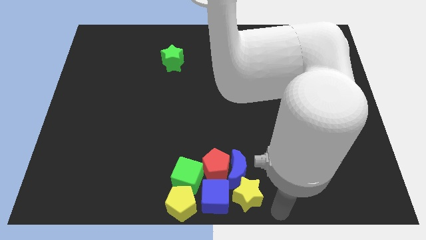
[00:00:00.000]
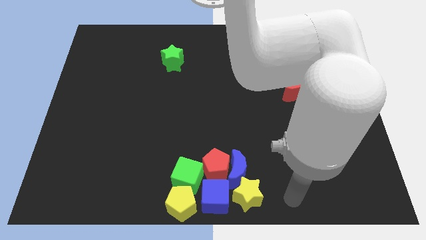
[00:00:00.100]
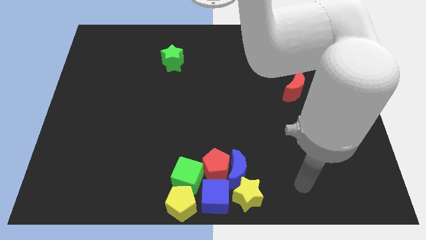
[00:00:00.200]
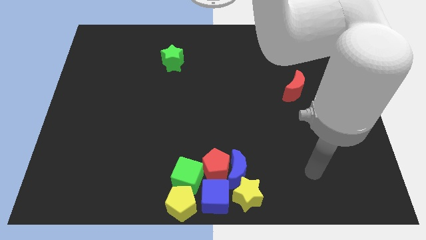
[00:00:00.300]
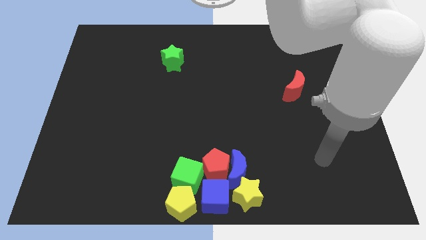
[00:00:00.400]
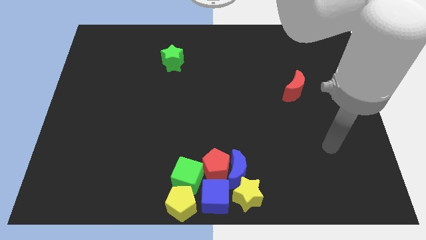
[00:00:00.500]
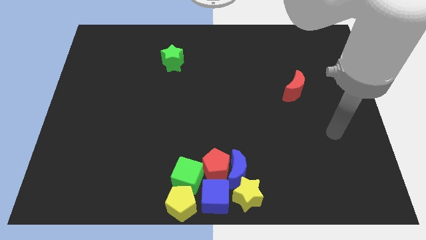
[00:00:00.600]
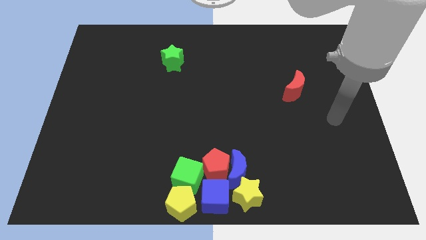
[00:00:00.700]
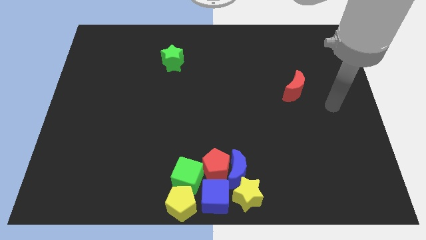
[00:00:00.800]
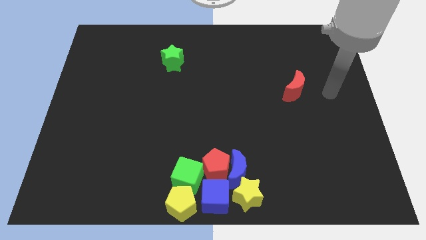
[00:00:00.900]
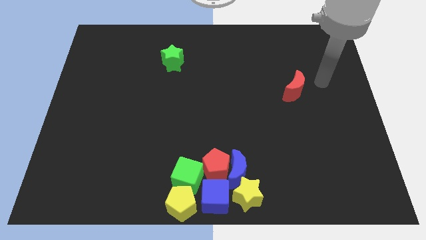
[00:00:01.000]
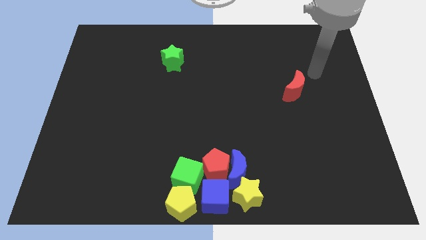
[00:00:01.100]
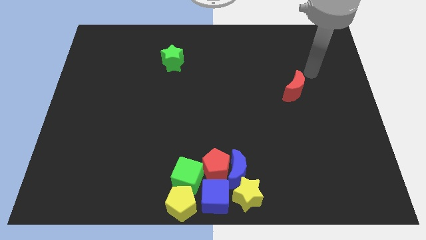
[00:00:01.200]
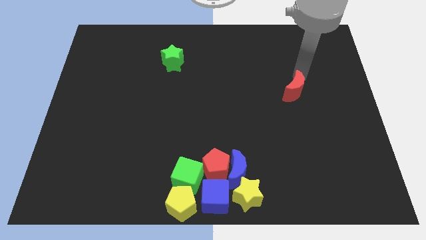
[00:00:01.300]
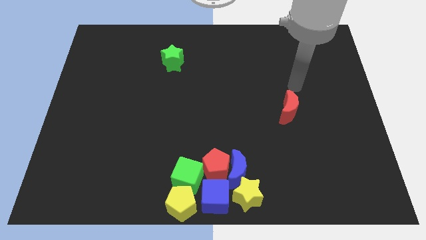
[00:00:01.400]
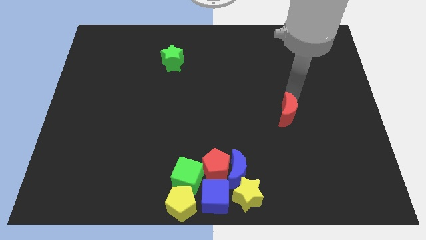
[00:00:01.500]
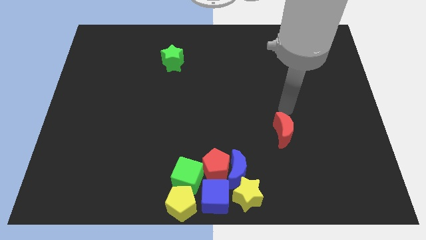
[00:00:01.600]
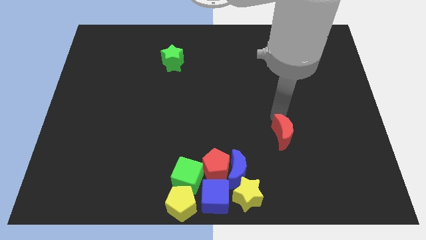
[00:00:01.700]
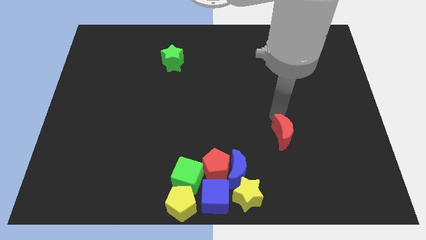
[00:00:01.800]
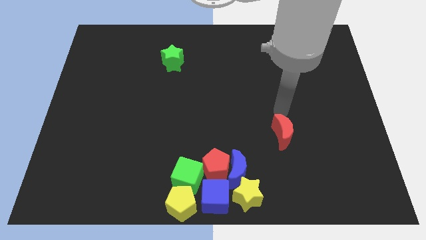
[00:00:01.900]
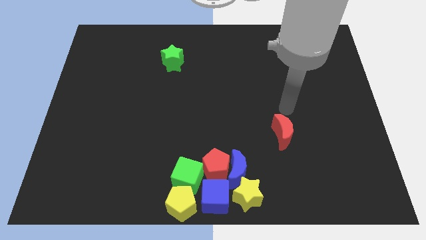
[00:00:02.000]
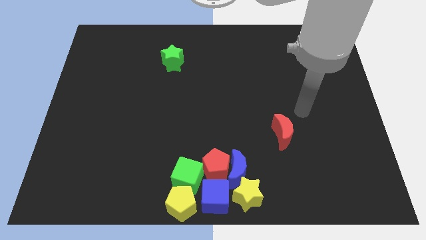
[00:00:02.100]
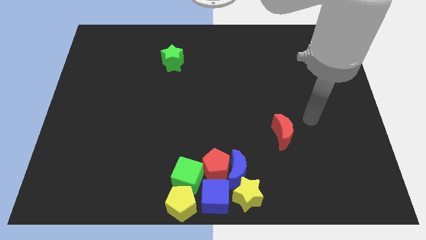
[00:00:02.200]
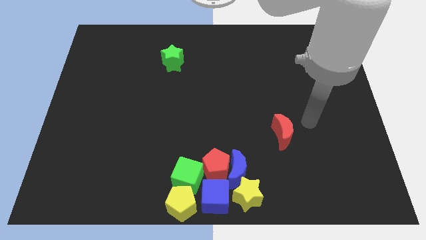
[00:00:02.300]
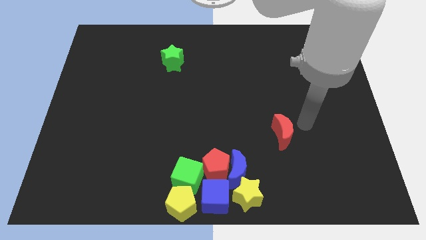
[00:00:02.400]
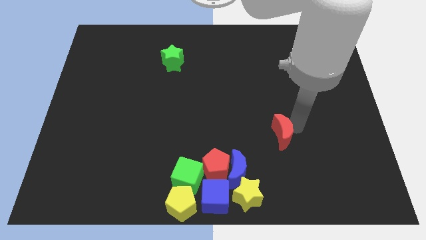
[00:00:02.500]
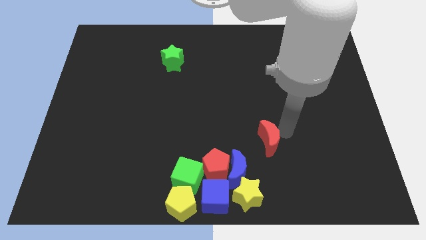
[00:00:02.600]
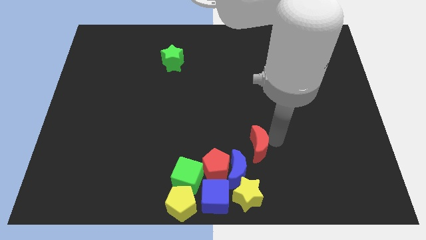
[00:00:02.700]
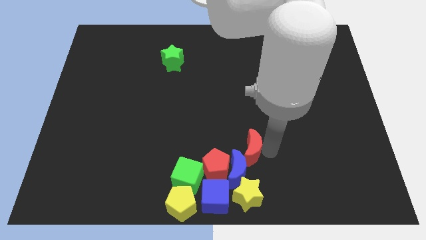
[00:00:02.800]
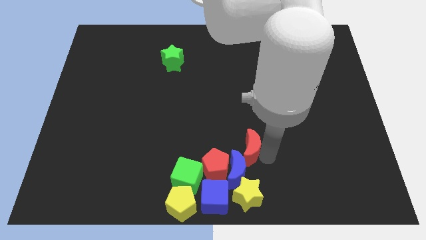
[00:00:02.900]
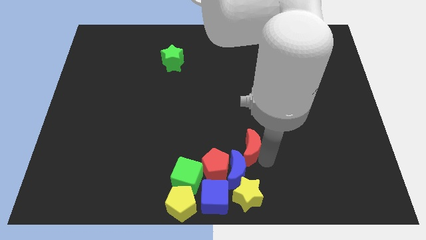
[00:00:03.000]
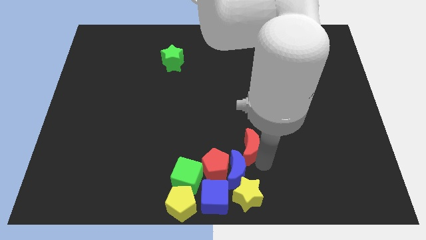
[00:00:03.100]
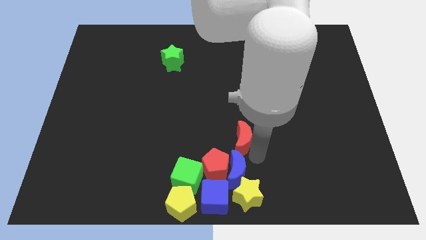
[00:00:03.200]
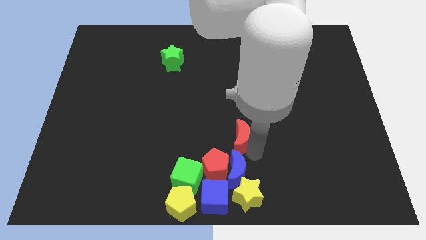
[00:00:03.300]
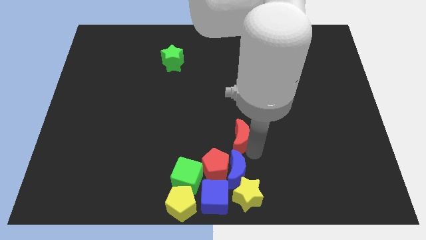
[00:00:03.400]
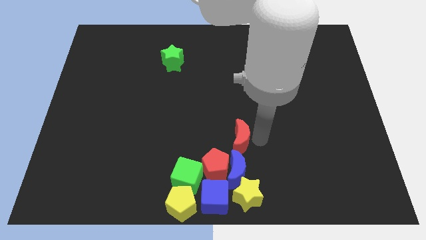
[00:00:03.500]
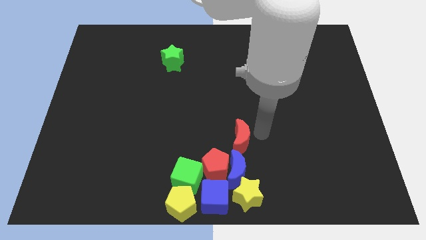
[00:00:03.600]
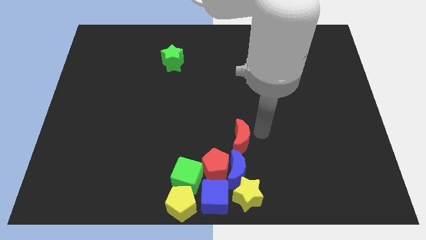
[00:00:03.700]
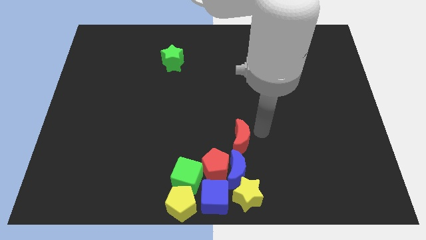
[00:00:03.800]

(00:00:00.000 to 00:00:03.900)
place the red crescent at the top of blue crescent

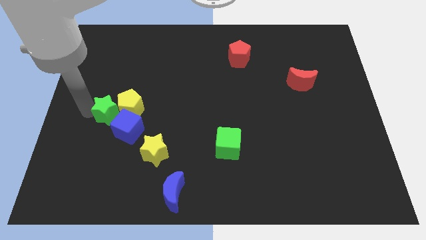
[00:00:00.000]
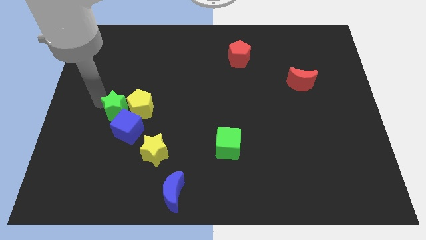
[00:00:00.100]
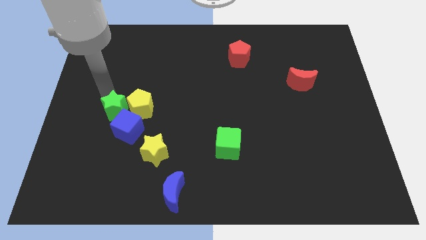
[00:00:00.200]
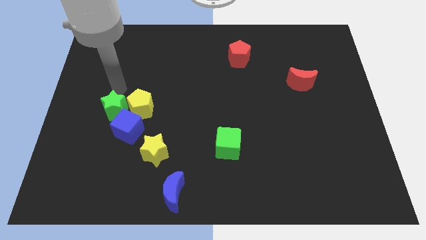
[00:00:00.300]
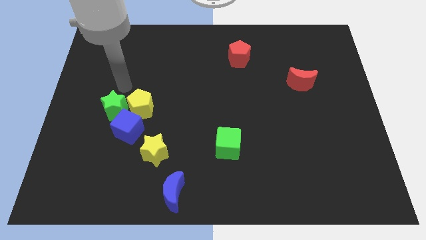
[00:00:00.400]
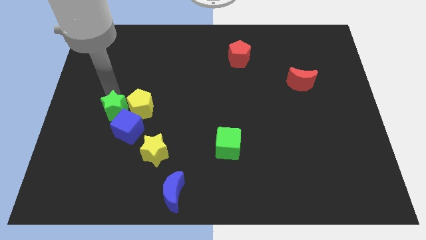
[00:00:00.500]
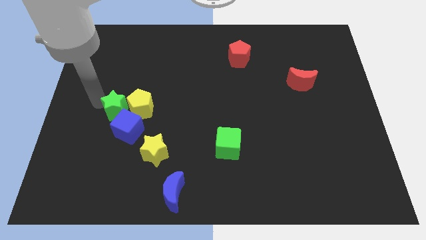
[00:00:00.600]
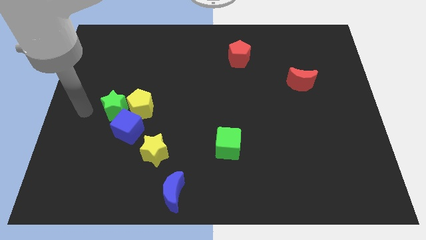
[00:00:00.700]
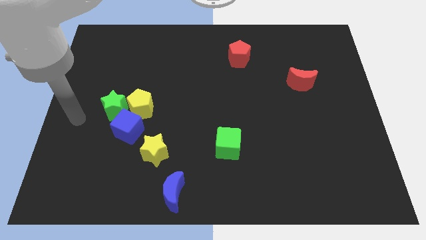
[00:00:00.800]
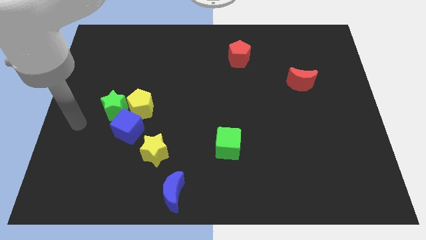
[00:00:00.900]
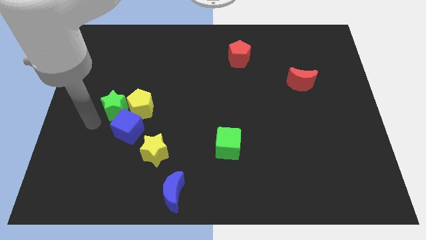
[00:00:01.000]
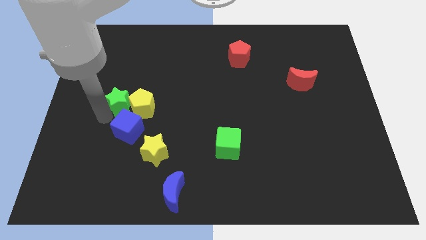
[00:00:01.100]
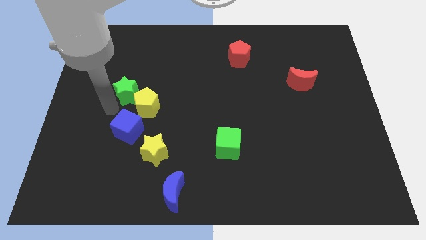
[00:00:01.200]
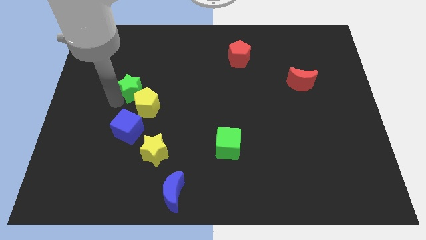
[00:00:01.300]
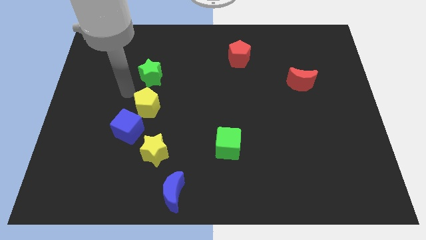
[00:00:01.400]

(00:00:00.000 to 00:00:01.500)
slide the green star above the yellow pentagon

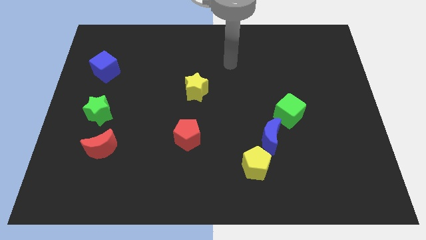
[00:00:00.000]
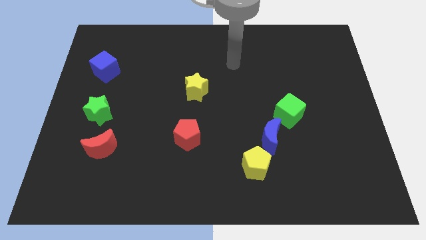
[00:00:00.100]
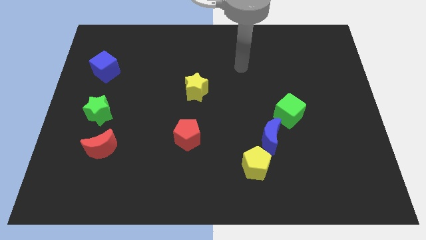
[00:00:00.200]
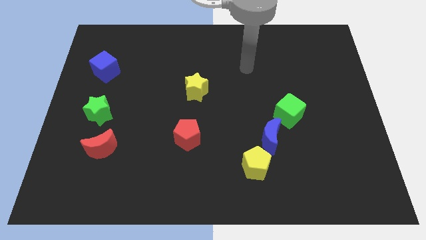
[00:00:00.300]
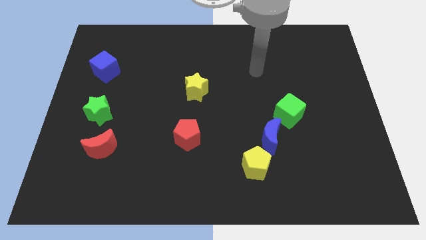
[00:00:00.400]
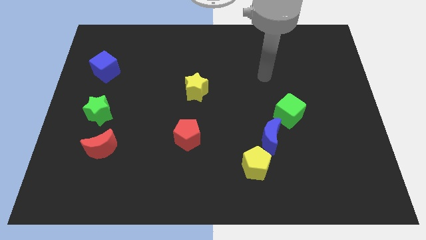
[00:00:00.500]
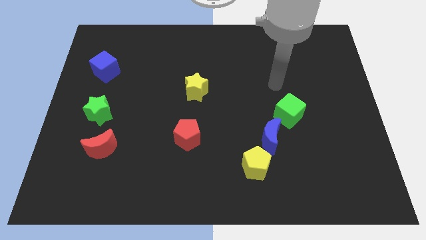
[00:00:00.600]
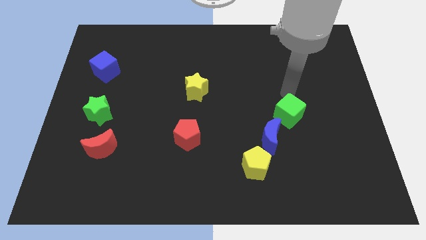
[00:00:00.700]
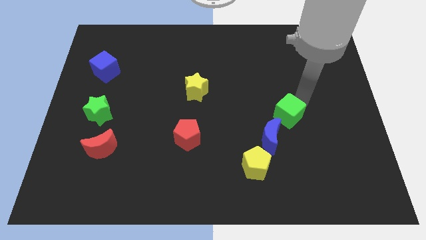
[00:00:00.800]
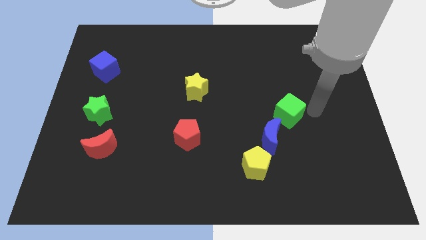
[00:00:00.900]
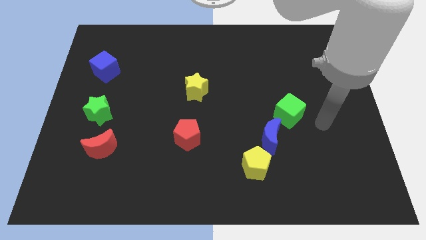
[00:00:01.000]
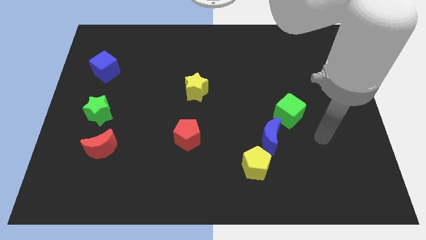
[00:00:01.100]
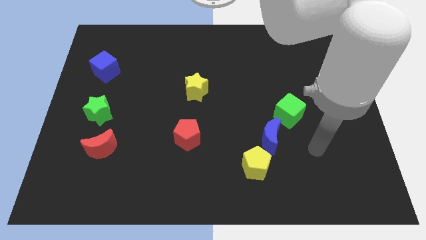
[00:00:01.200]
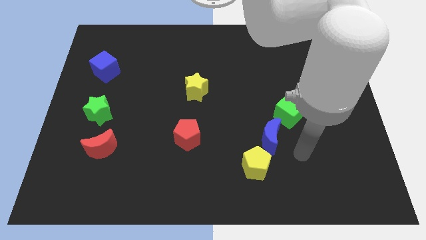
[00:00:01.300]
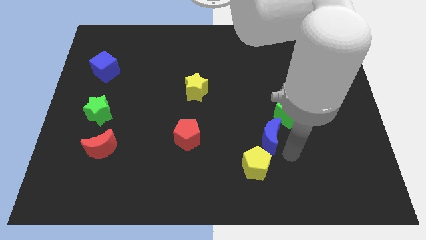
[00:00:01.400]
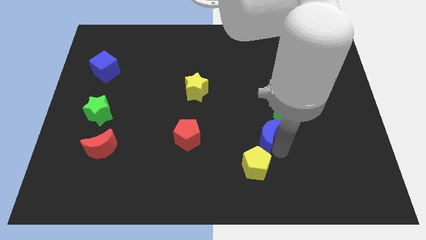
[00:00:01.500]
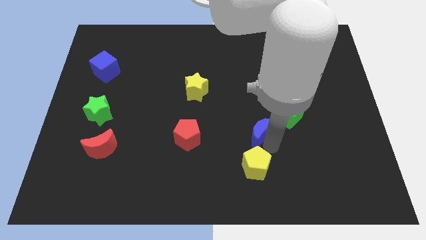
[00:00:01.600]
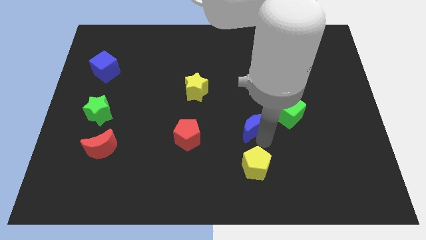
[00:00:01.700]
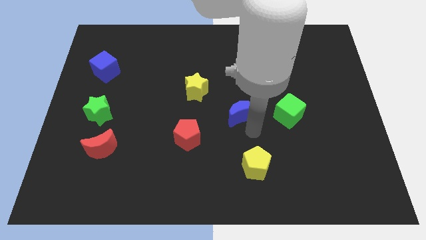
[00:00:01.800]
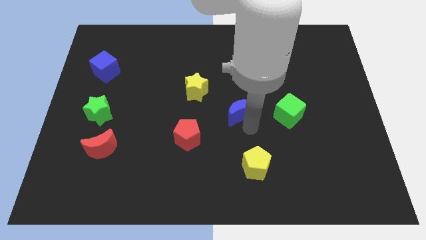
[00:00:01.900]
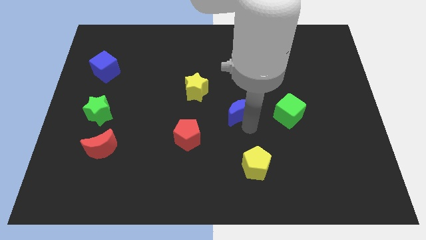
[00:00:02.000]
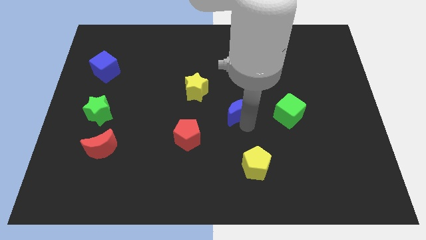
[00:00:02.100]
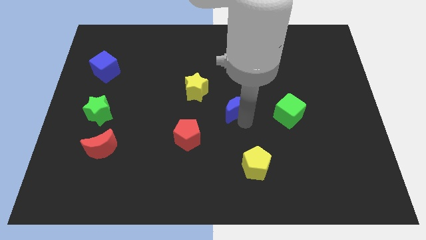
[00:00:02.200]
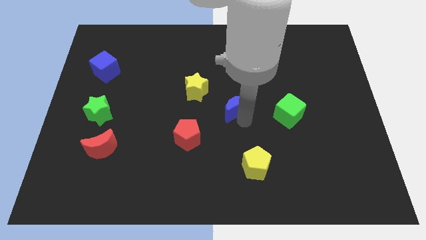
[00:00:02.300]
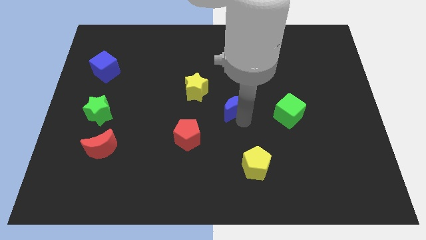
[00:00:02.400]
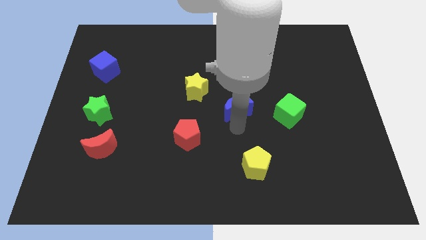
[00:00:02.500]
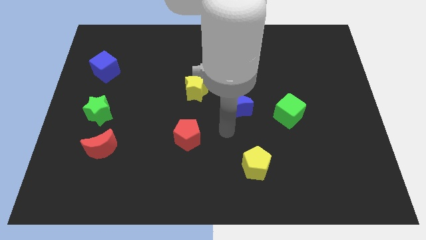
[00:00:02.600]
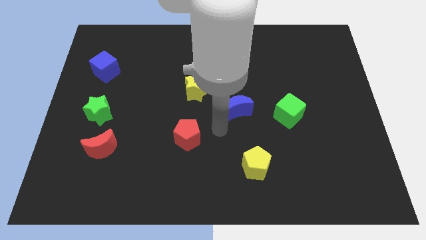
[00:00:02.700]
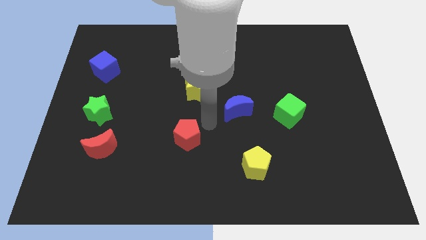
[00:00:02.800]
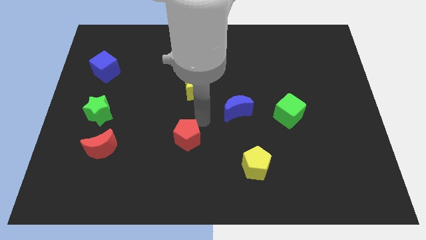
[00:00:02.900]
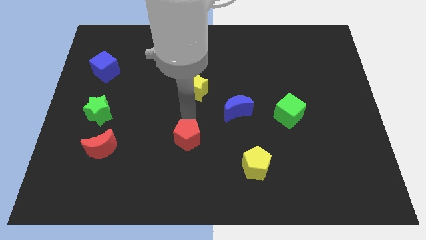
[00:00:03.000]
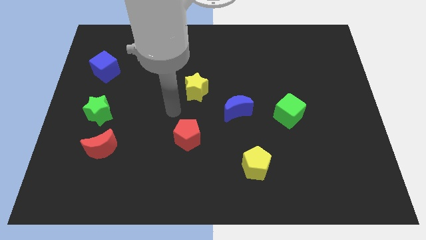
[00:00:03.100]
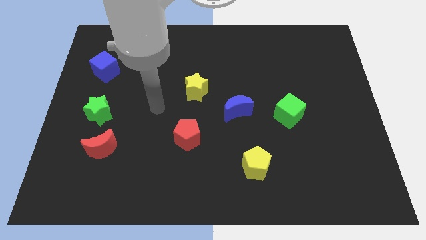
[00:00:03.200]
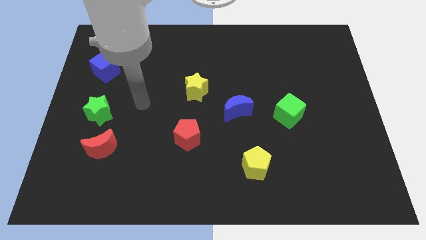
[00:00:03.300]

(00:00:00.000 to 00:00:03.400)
move the blue moon to the left of the green cube
